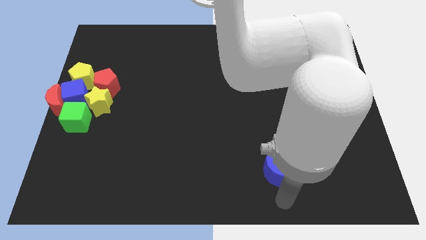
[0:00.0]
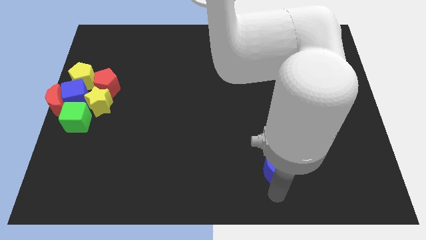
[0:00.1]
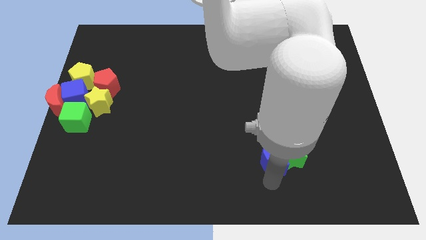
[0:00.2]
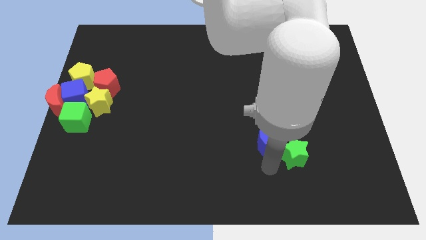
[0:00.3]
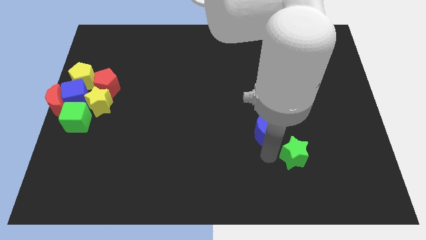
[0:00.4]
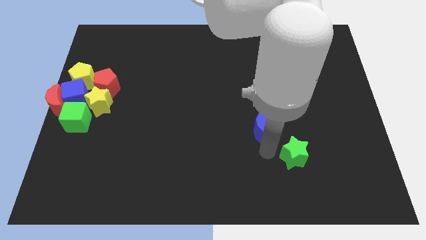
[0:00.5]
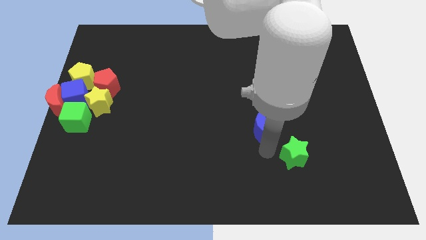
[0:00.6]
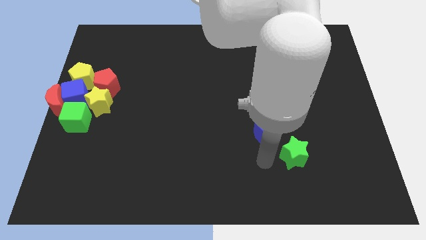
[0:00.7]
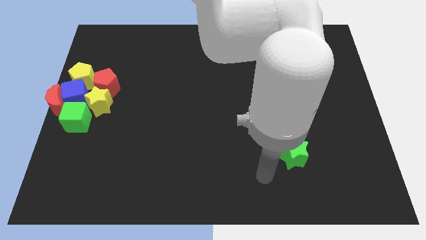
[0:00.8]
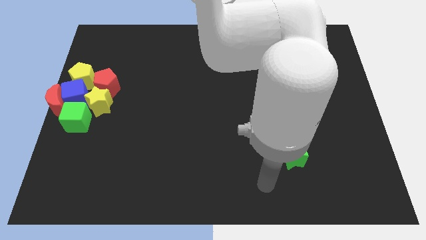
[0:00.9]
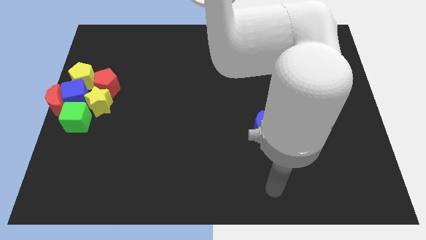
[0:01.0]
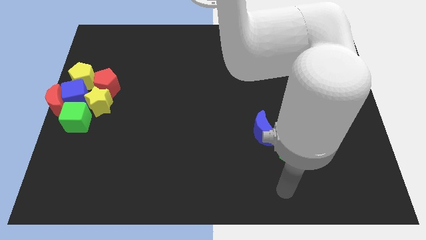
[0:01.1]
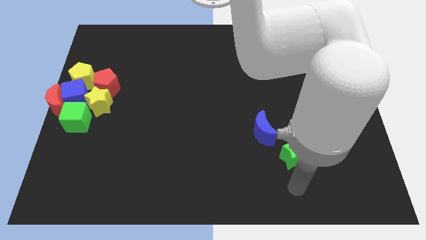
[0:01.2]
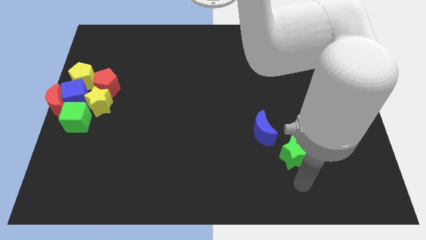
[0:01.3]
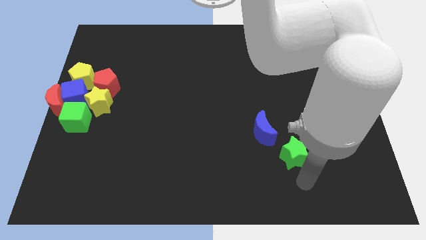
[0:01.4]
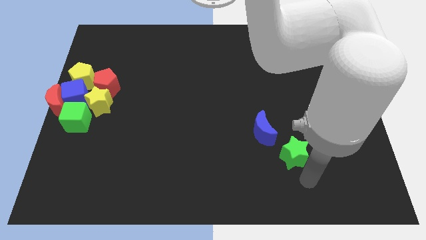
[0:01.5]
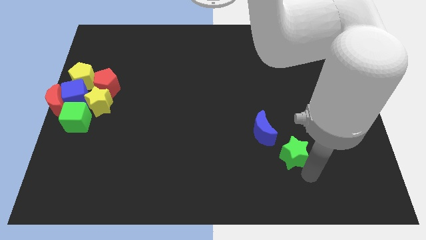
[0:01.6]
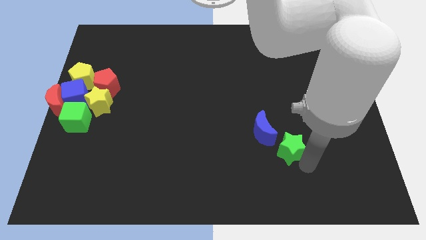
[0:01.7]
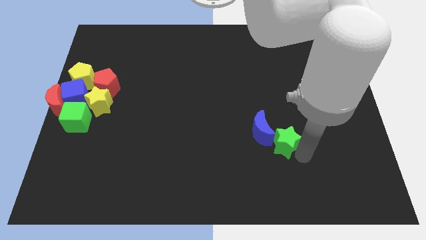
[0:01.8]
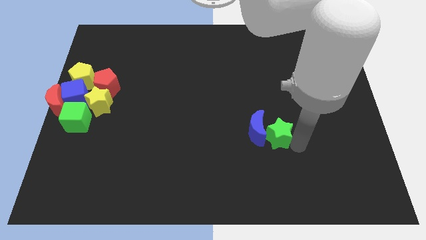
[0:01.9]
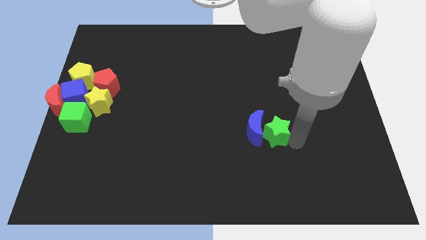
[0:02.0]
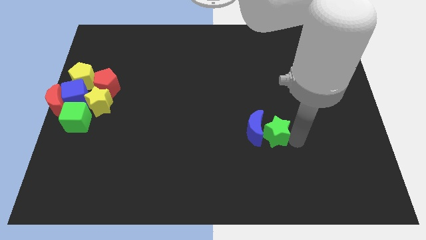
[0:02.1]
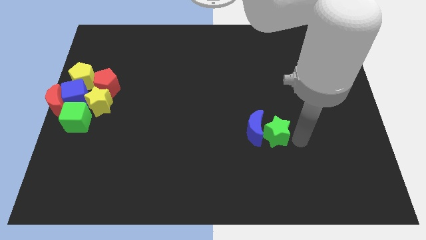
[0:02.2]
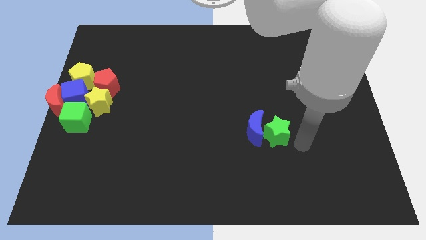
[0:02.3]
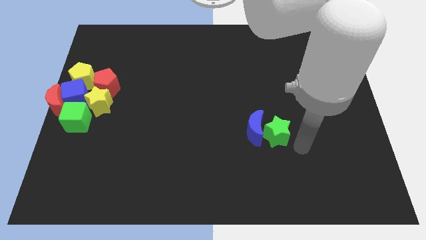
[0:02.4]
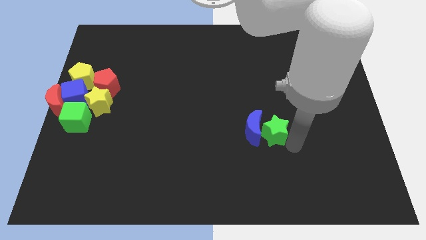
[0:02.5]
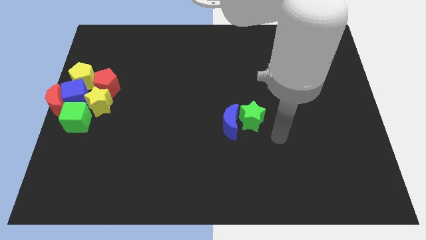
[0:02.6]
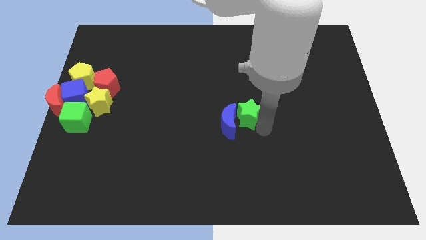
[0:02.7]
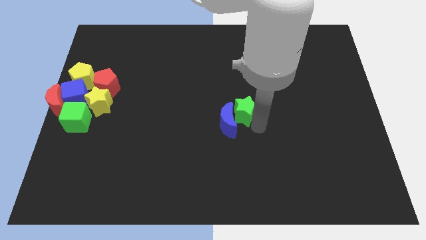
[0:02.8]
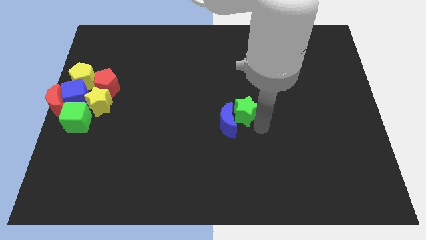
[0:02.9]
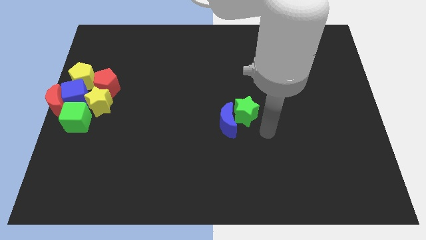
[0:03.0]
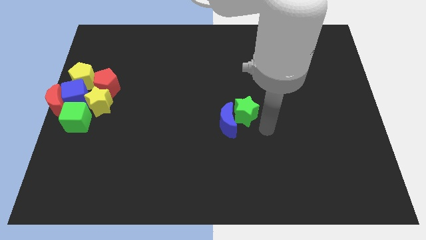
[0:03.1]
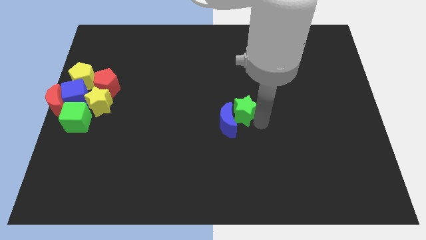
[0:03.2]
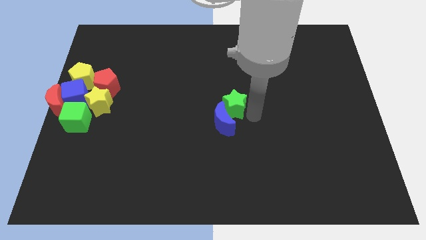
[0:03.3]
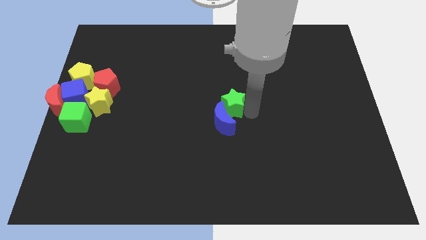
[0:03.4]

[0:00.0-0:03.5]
move the blue moon and green star towards the center of the board

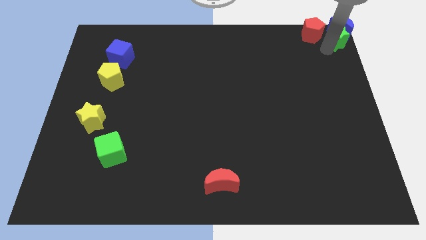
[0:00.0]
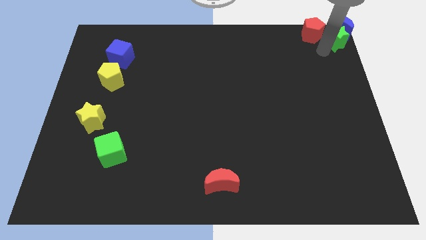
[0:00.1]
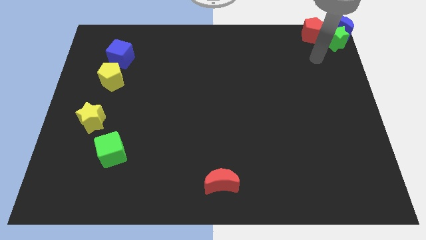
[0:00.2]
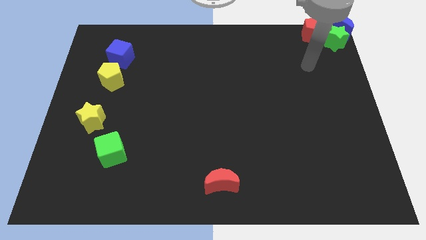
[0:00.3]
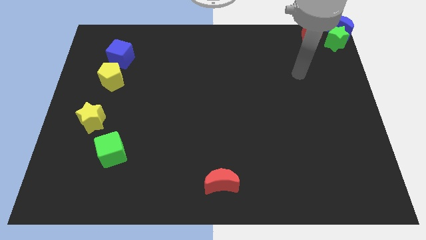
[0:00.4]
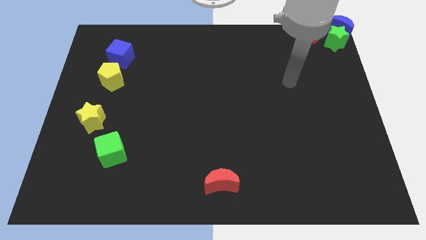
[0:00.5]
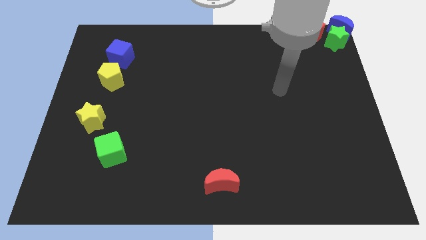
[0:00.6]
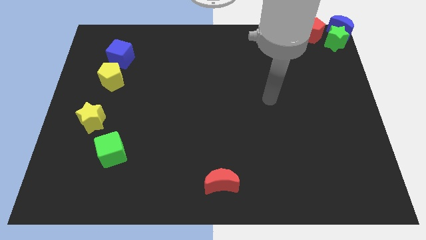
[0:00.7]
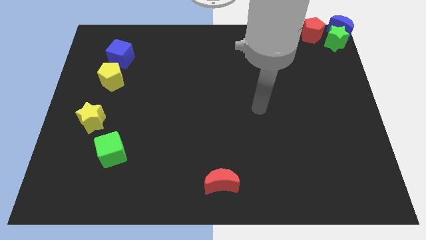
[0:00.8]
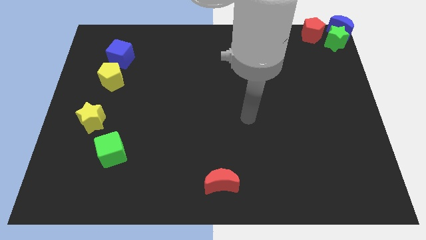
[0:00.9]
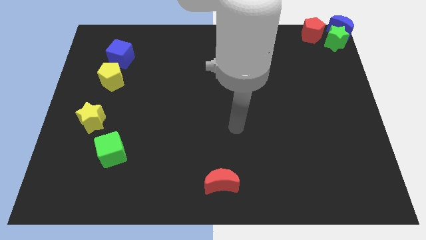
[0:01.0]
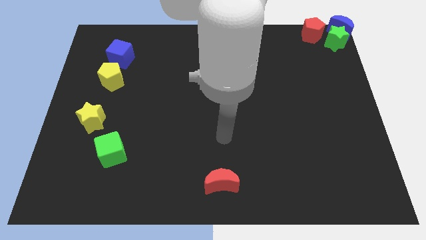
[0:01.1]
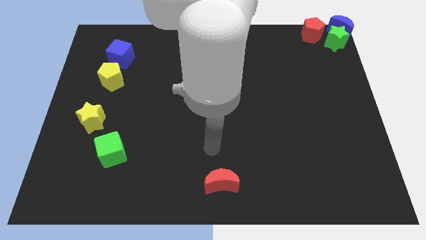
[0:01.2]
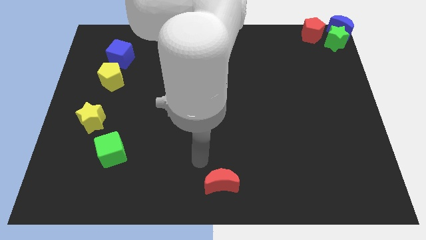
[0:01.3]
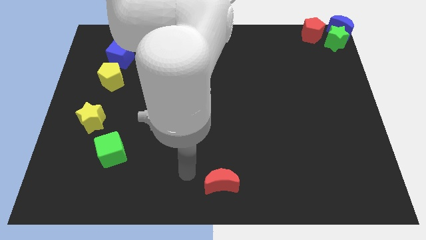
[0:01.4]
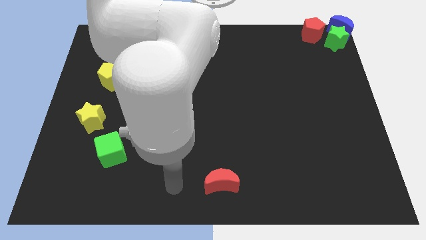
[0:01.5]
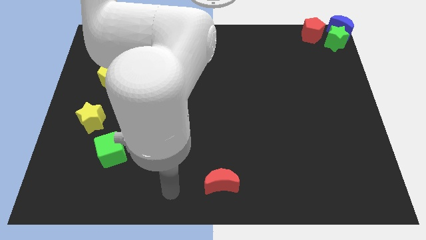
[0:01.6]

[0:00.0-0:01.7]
move your arm away from the green star

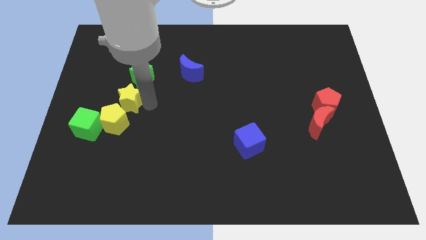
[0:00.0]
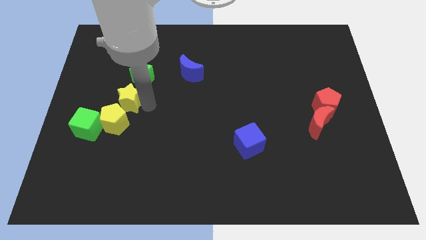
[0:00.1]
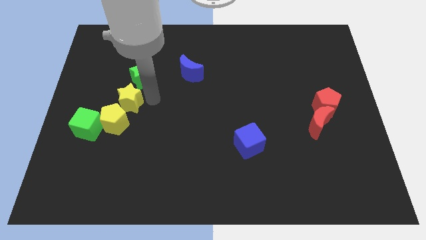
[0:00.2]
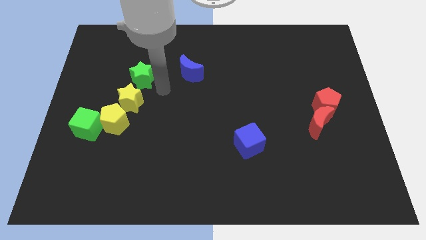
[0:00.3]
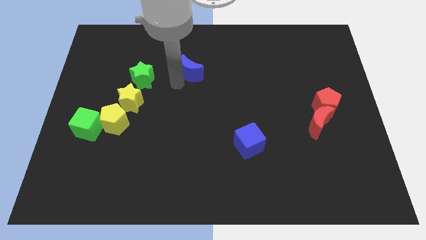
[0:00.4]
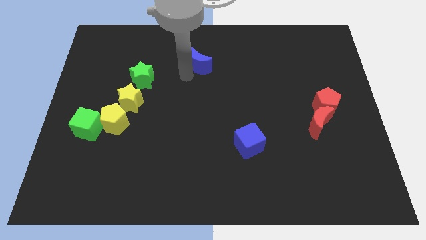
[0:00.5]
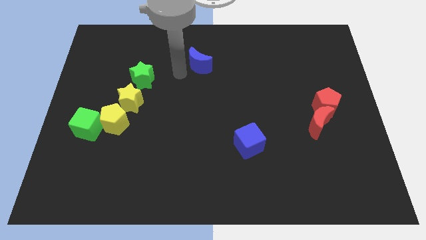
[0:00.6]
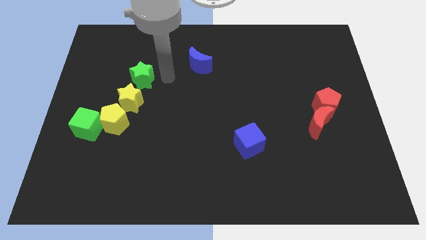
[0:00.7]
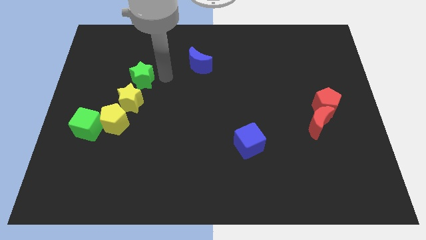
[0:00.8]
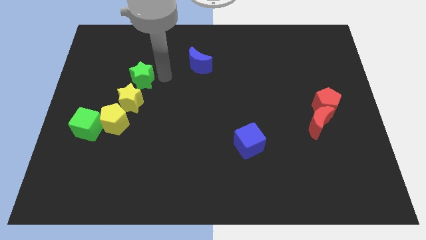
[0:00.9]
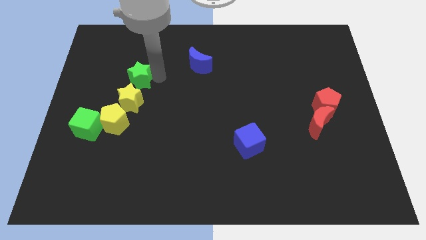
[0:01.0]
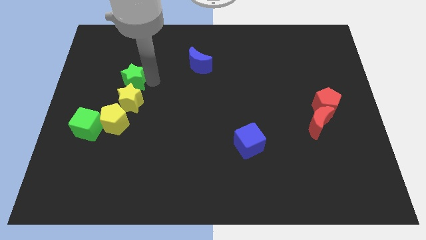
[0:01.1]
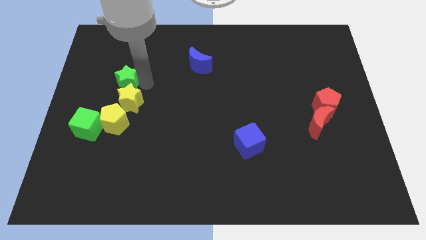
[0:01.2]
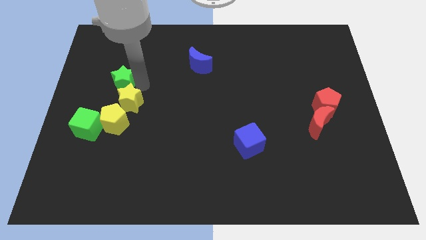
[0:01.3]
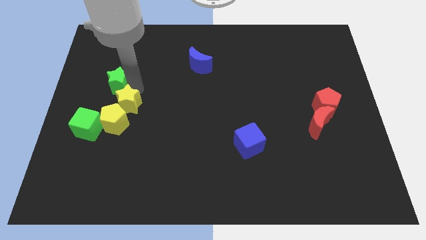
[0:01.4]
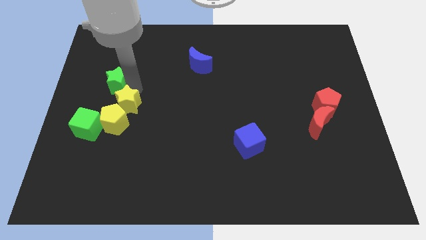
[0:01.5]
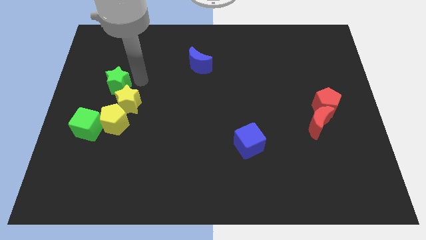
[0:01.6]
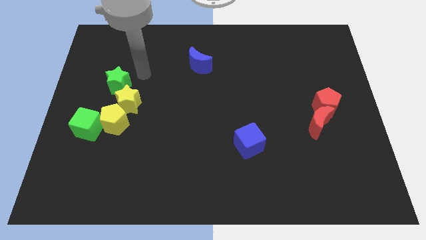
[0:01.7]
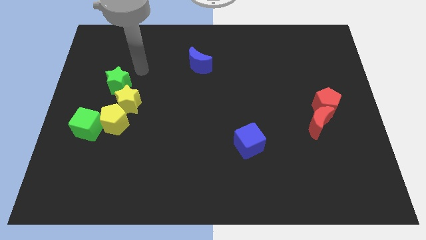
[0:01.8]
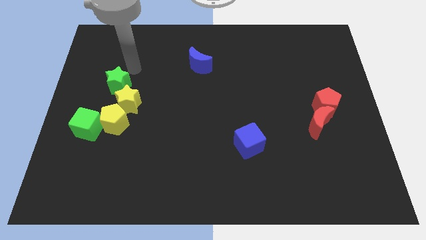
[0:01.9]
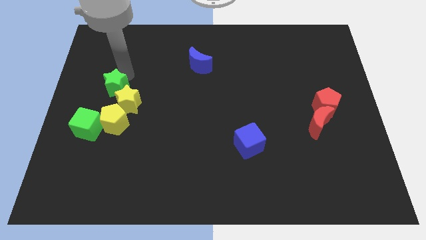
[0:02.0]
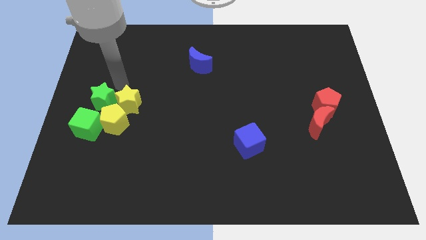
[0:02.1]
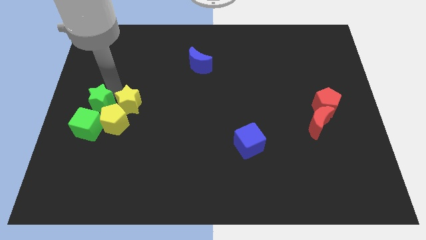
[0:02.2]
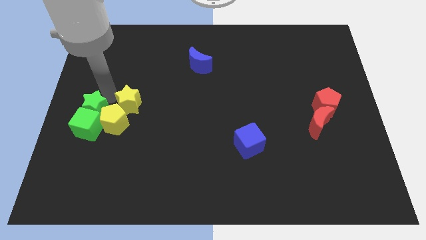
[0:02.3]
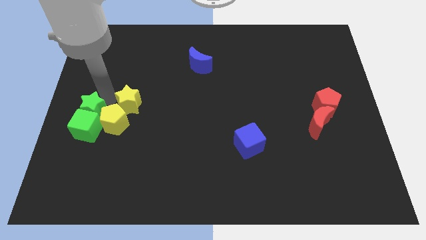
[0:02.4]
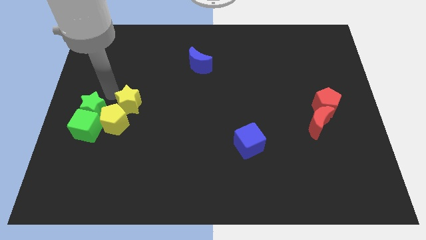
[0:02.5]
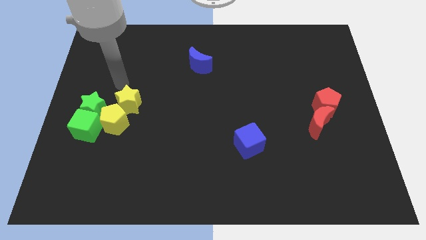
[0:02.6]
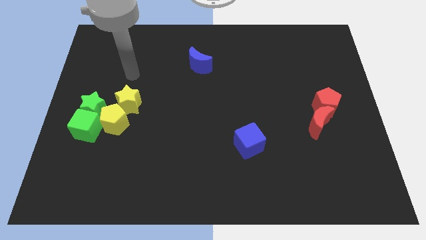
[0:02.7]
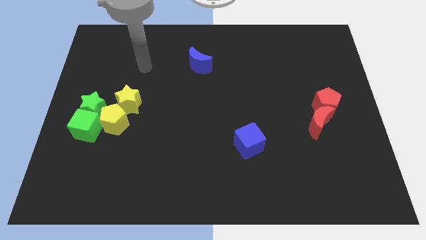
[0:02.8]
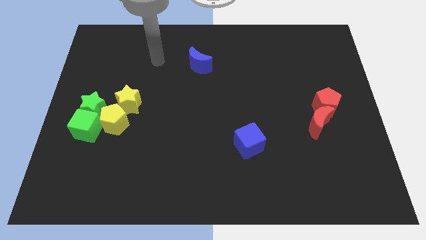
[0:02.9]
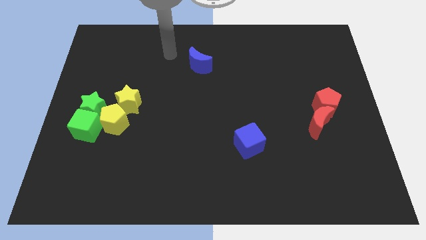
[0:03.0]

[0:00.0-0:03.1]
move the green star into the green cube

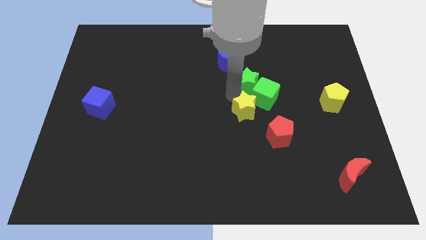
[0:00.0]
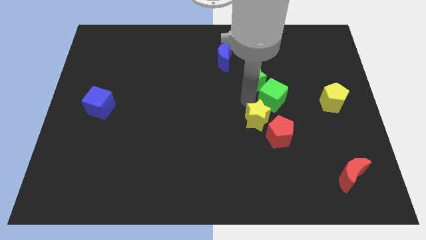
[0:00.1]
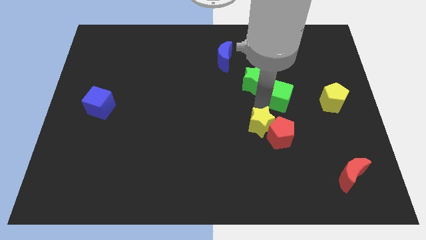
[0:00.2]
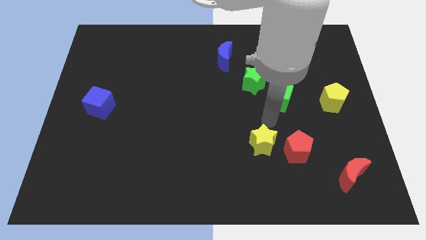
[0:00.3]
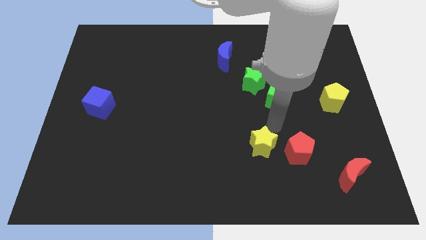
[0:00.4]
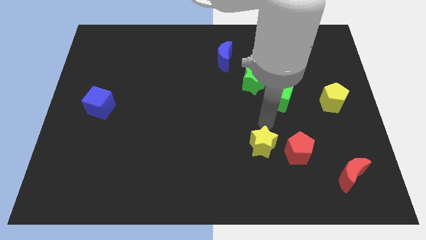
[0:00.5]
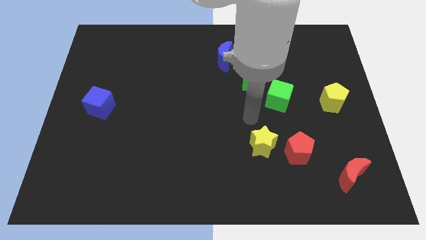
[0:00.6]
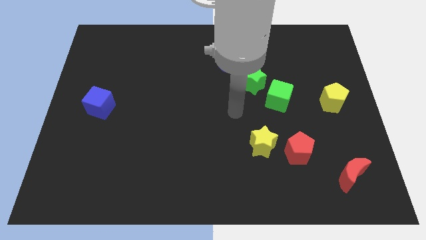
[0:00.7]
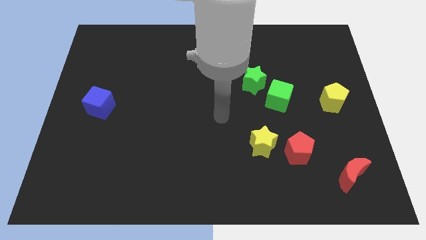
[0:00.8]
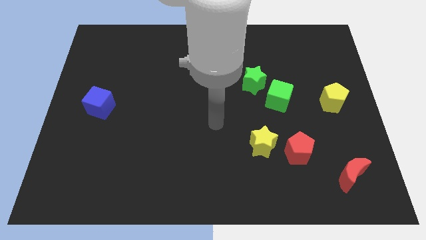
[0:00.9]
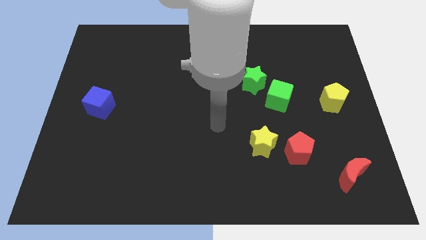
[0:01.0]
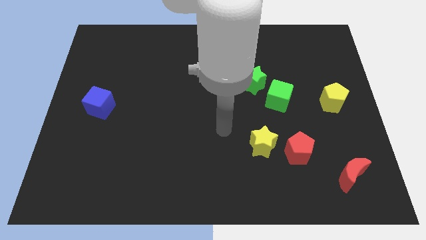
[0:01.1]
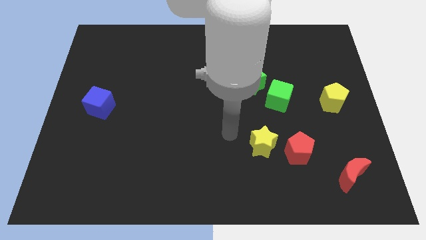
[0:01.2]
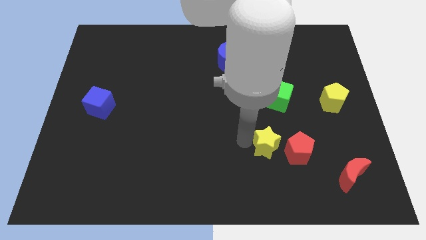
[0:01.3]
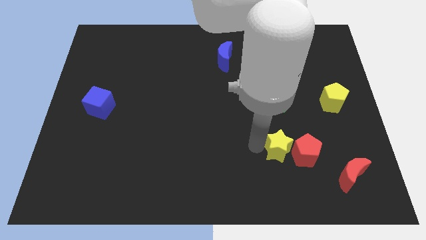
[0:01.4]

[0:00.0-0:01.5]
push the yellow star into the red pentagon
